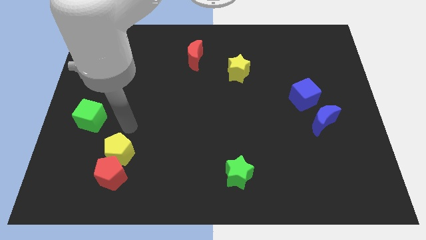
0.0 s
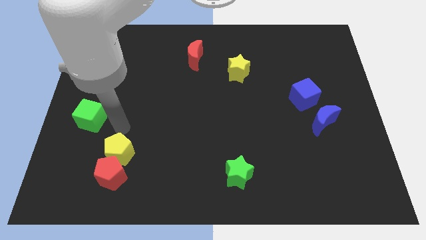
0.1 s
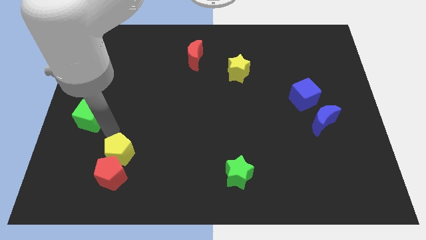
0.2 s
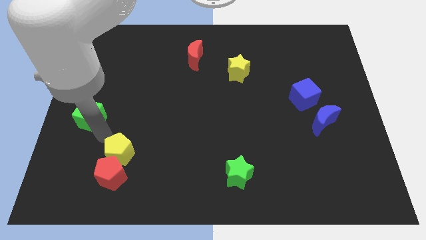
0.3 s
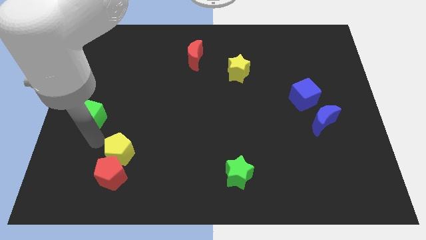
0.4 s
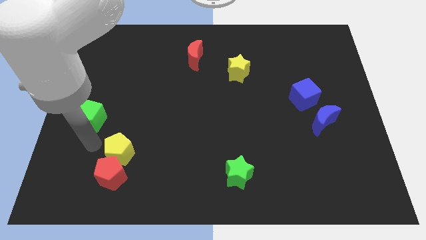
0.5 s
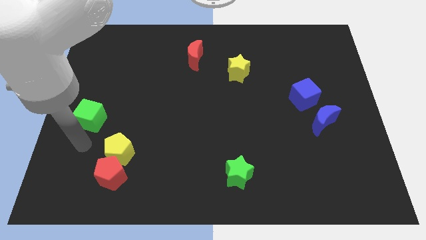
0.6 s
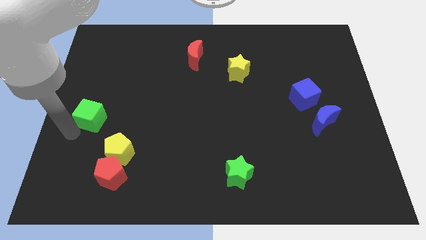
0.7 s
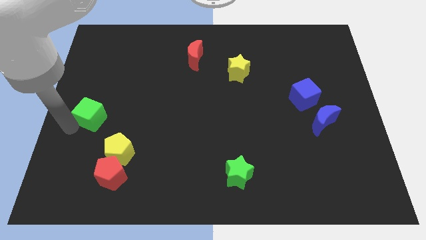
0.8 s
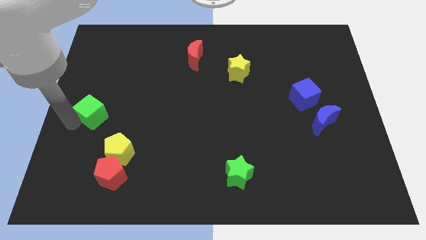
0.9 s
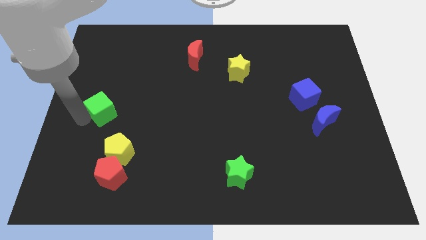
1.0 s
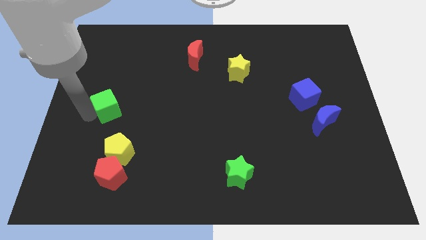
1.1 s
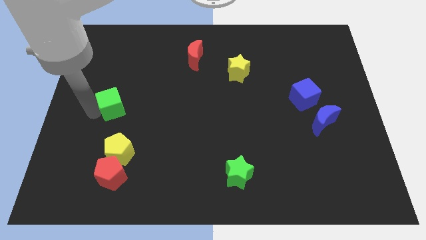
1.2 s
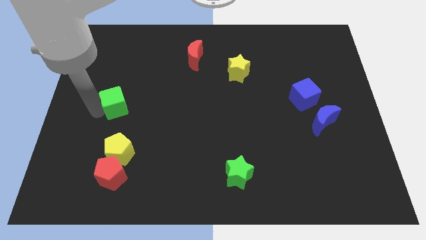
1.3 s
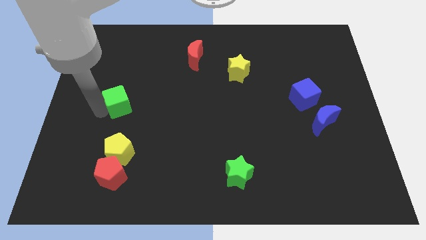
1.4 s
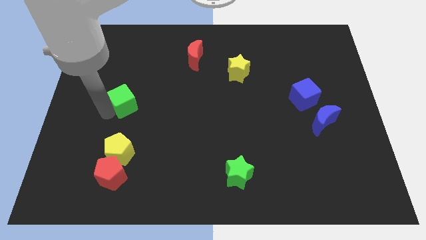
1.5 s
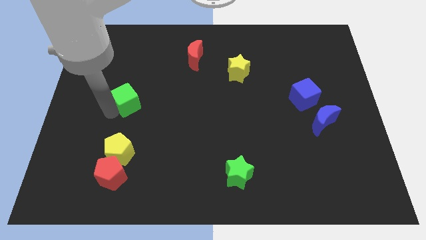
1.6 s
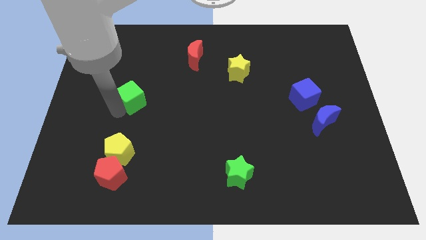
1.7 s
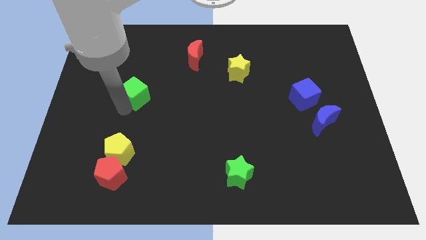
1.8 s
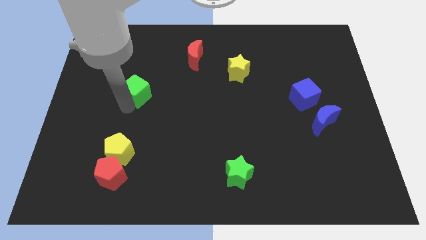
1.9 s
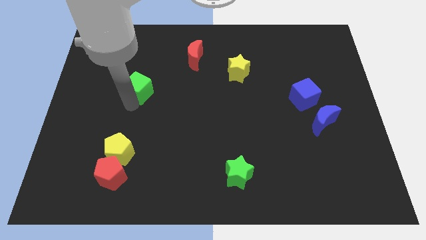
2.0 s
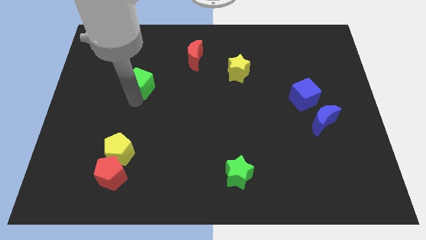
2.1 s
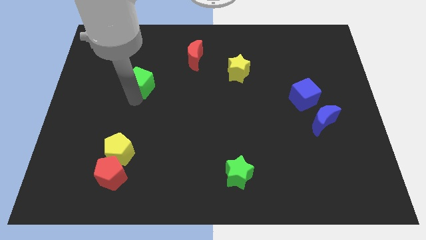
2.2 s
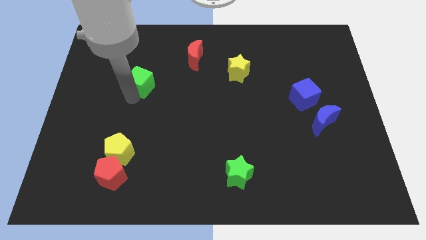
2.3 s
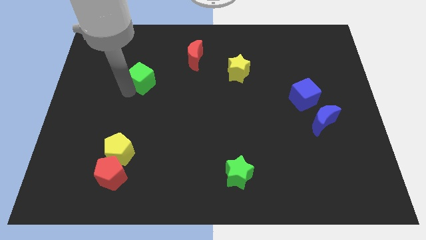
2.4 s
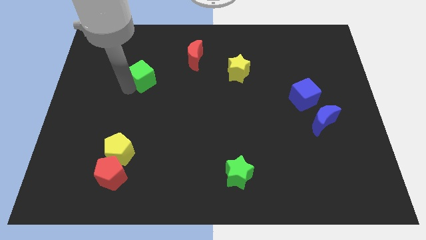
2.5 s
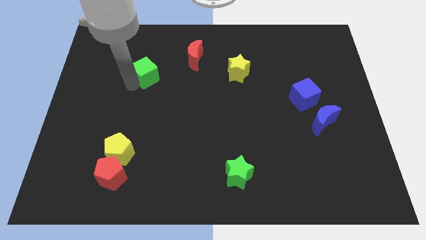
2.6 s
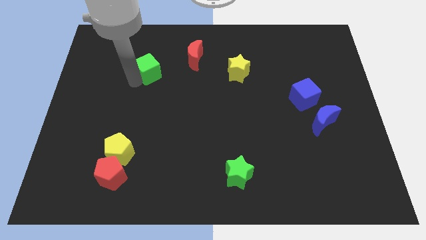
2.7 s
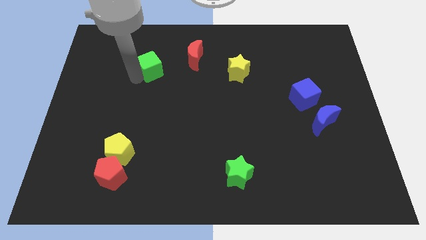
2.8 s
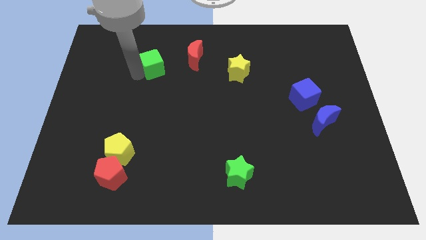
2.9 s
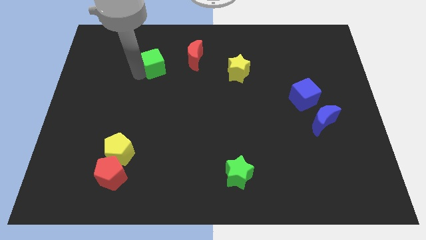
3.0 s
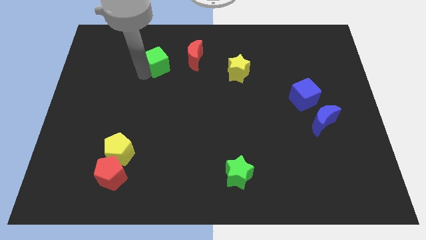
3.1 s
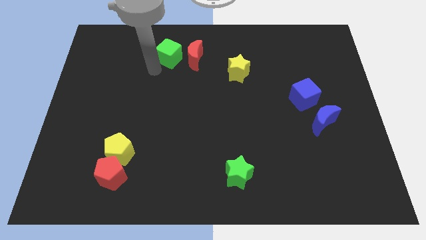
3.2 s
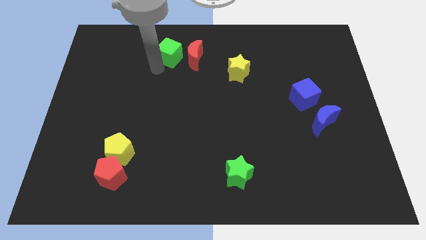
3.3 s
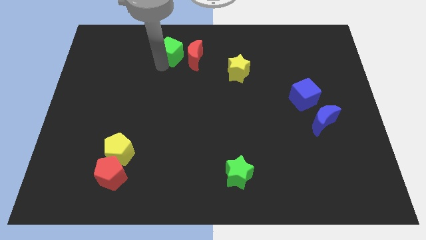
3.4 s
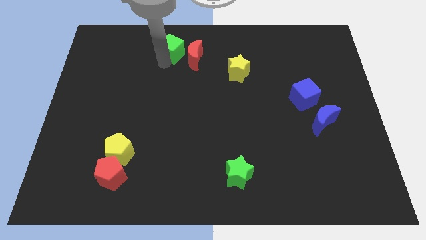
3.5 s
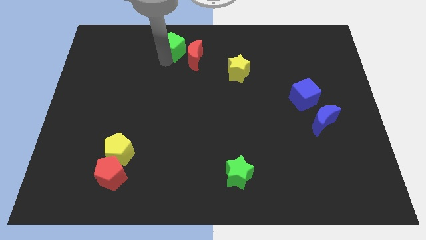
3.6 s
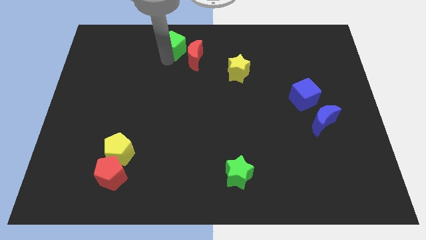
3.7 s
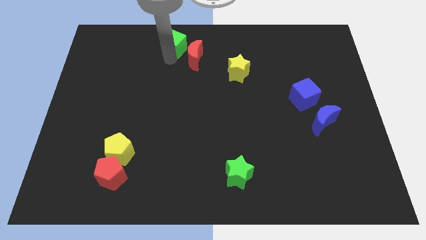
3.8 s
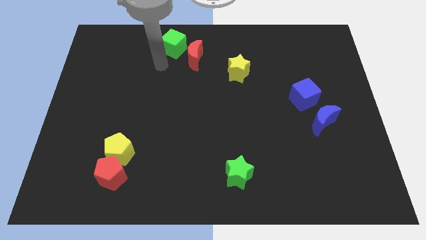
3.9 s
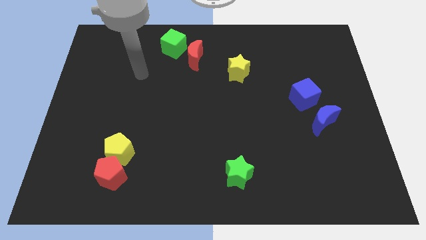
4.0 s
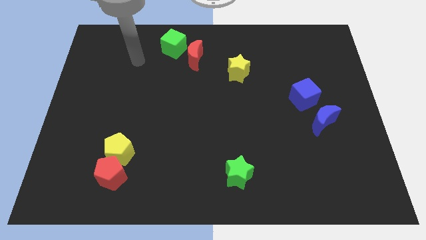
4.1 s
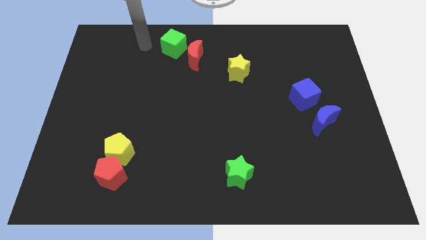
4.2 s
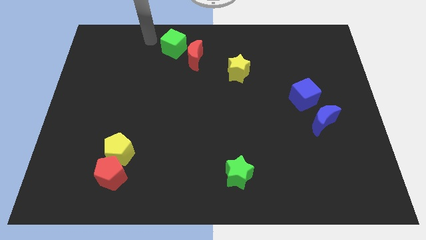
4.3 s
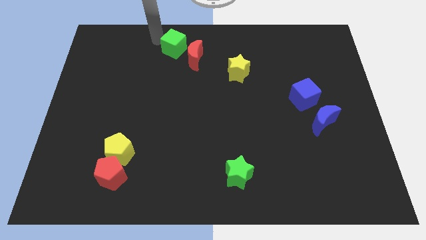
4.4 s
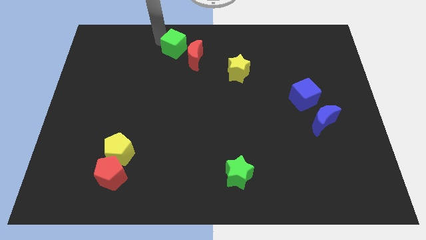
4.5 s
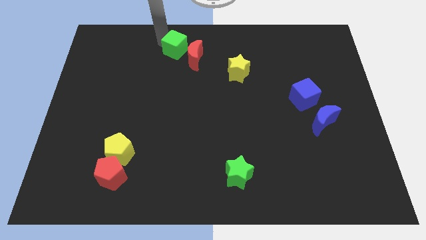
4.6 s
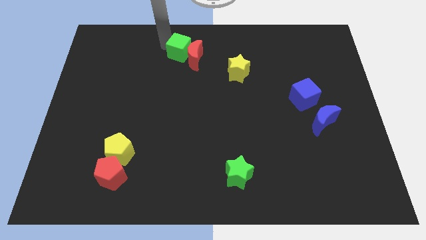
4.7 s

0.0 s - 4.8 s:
put the green cube towards the red moon

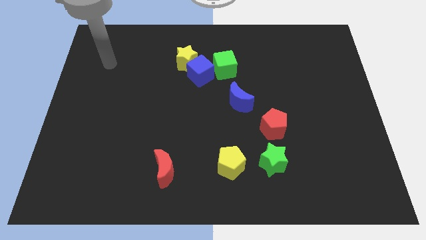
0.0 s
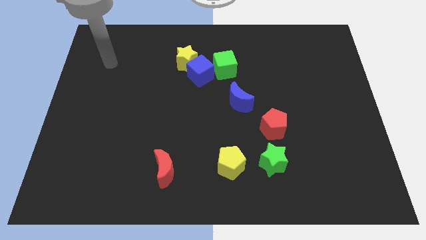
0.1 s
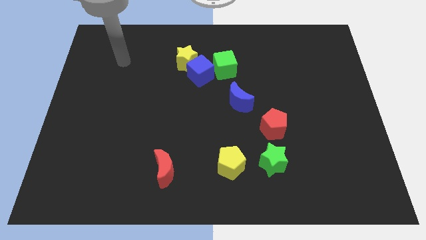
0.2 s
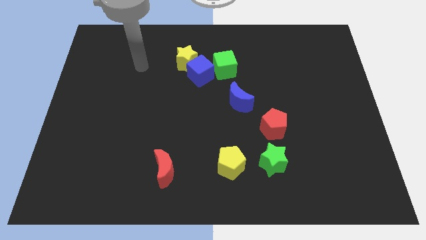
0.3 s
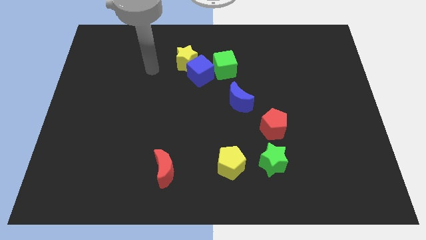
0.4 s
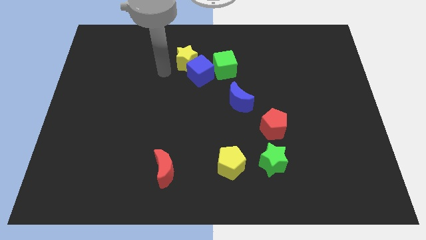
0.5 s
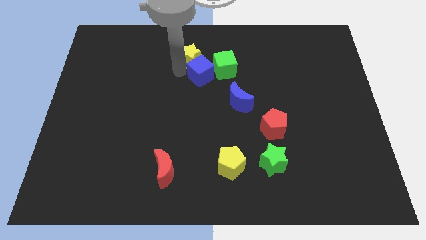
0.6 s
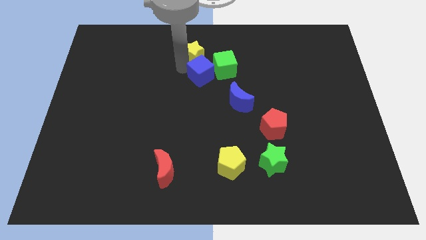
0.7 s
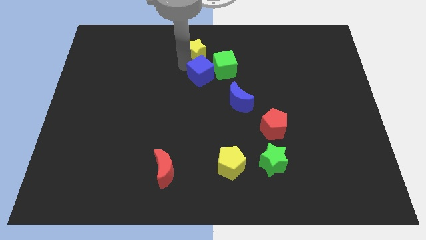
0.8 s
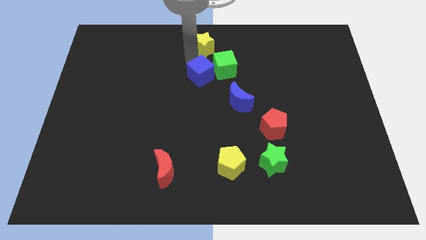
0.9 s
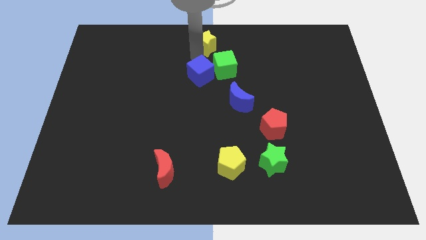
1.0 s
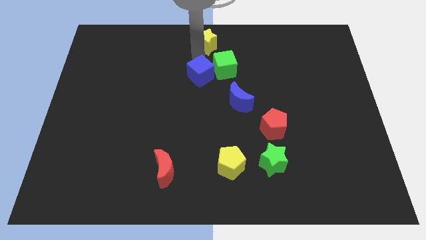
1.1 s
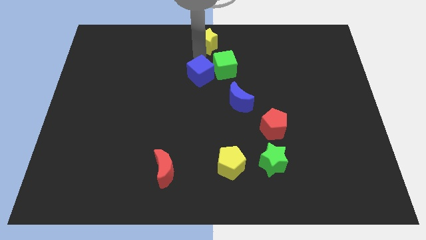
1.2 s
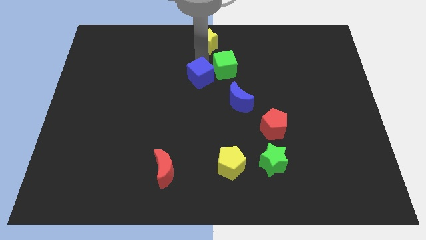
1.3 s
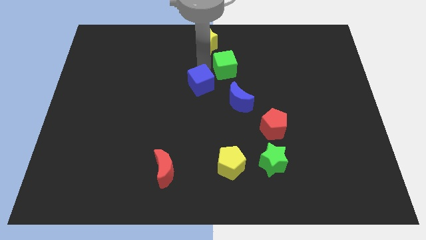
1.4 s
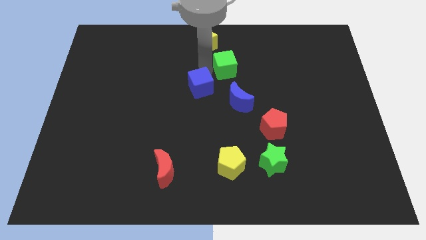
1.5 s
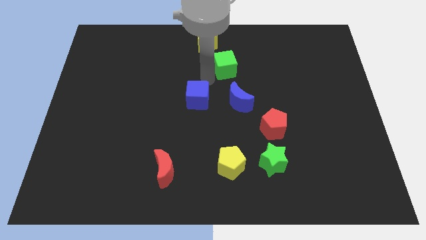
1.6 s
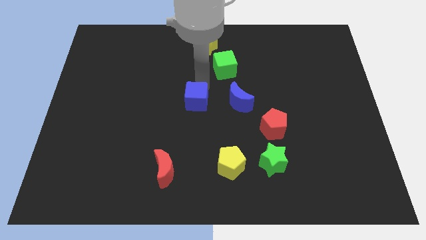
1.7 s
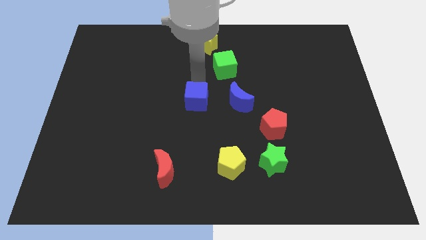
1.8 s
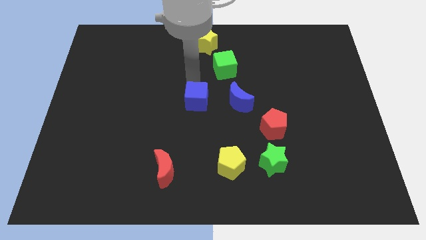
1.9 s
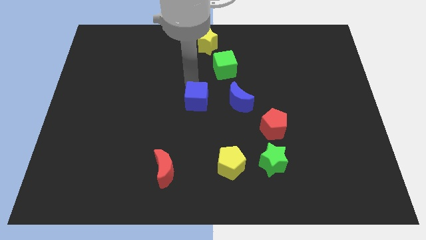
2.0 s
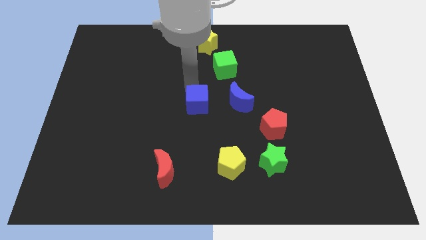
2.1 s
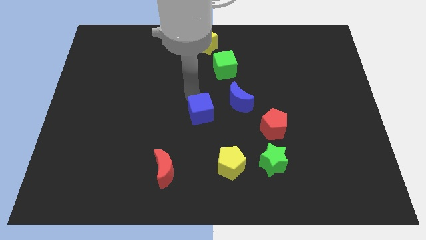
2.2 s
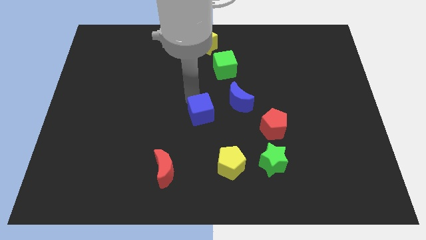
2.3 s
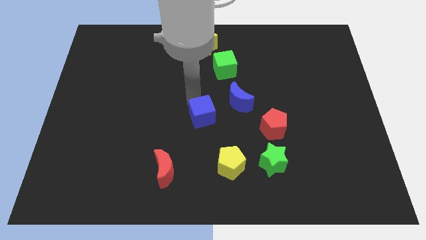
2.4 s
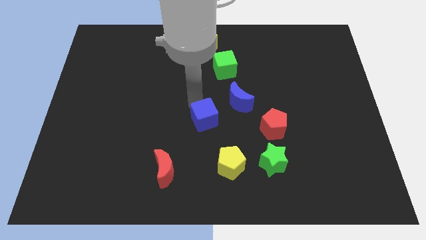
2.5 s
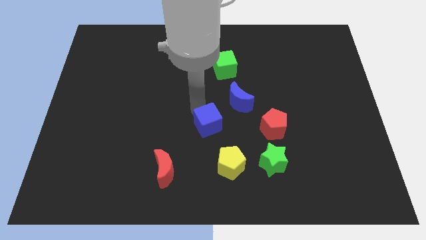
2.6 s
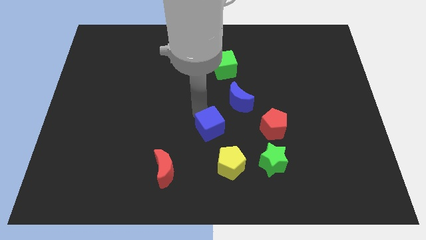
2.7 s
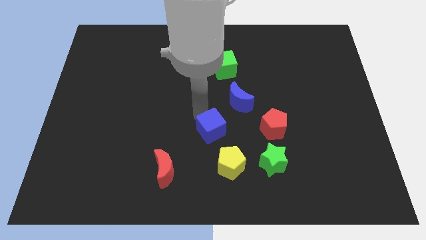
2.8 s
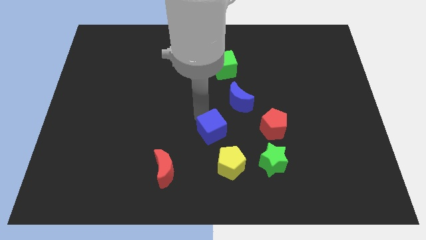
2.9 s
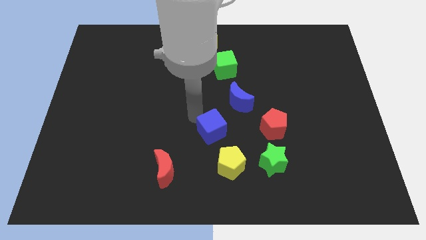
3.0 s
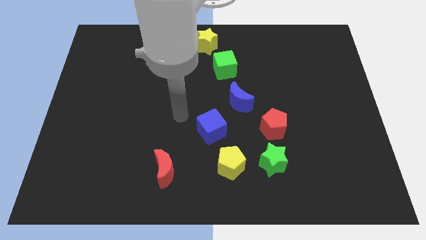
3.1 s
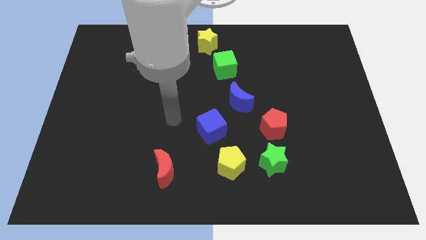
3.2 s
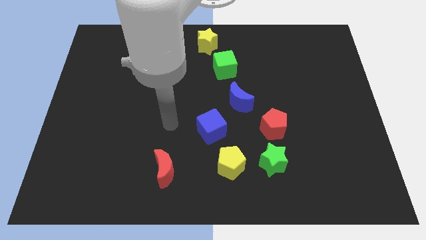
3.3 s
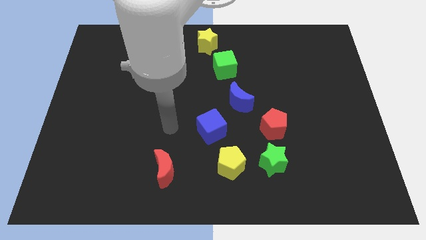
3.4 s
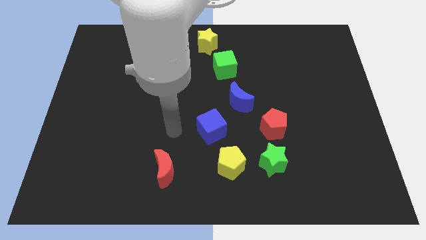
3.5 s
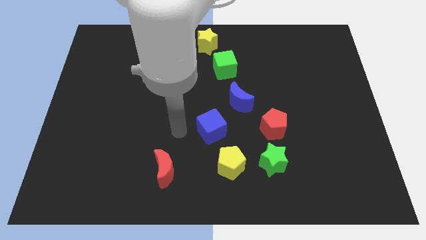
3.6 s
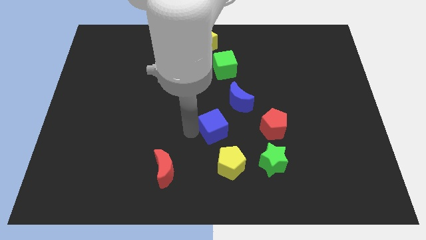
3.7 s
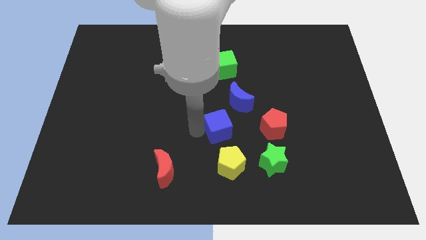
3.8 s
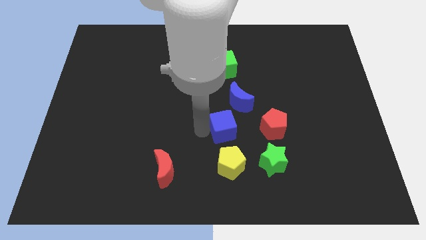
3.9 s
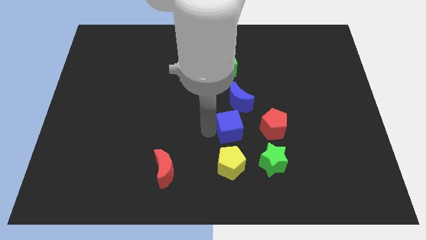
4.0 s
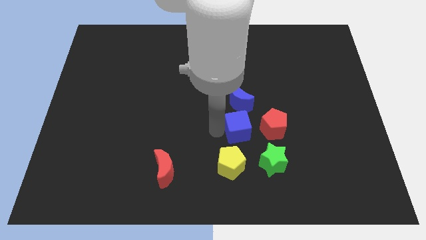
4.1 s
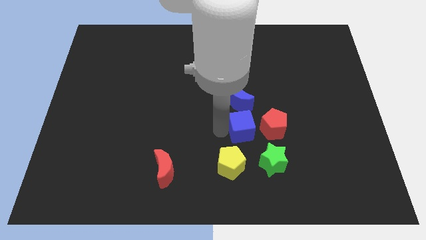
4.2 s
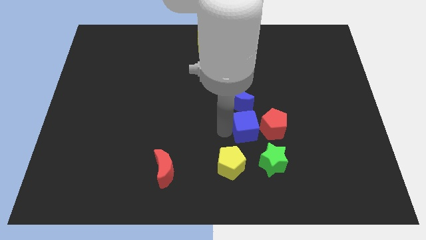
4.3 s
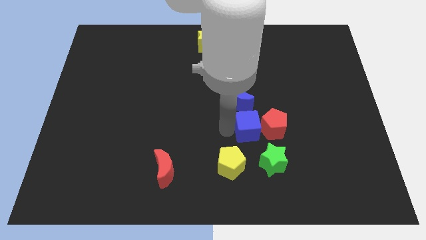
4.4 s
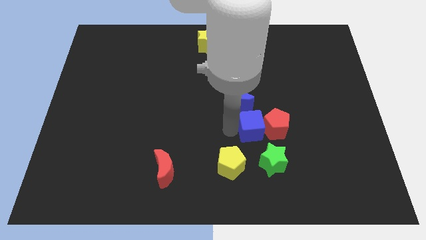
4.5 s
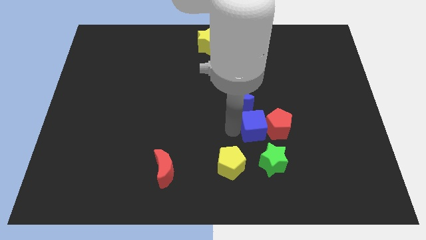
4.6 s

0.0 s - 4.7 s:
slide the blue cube towards the red pentagon
